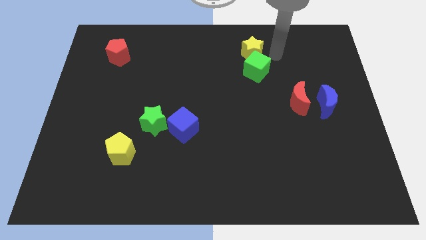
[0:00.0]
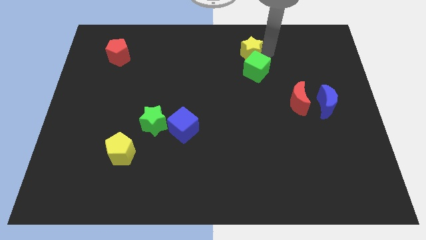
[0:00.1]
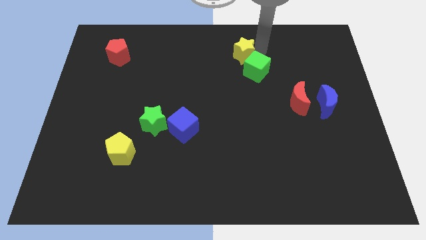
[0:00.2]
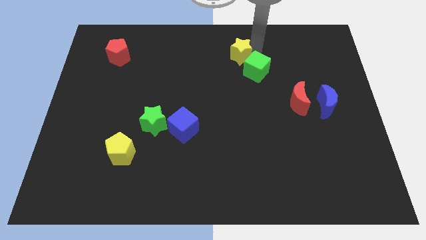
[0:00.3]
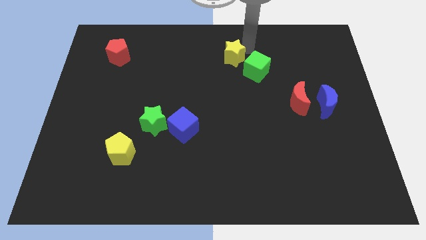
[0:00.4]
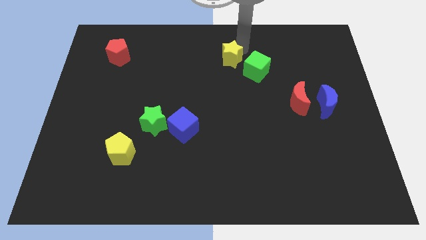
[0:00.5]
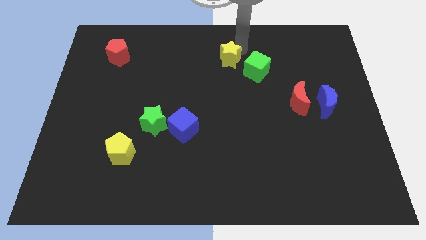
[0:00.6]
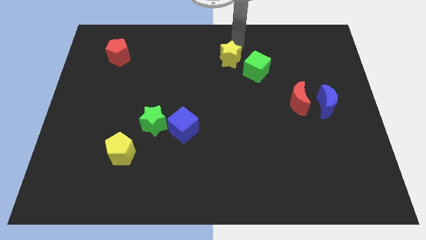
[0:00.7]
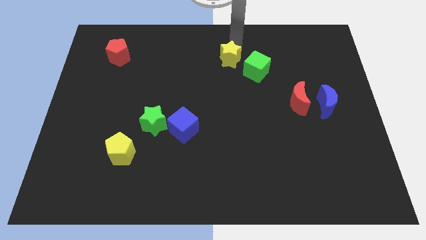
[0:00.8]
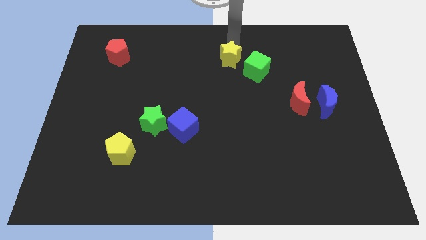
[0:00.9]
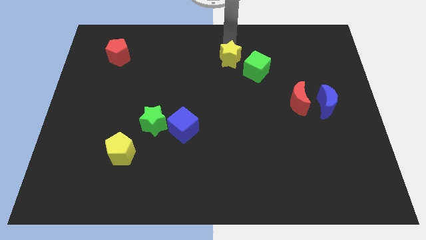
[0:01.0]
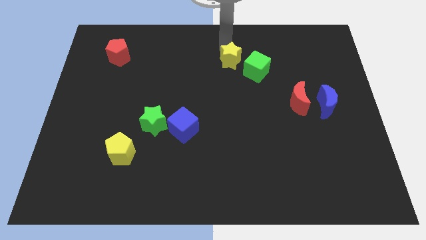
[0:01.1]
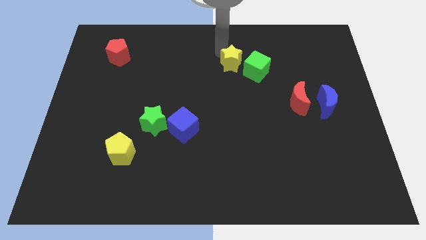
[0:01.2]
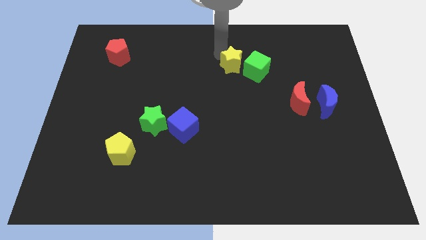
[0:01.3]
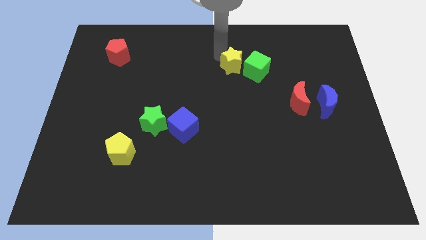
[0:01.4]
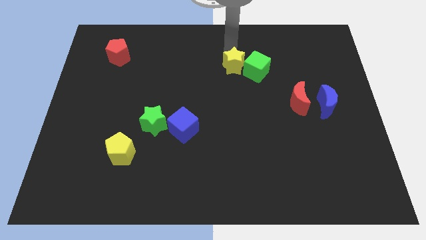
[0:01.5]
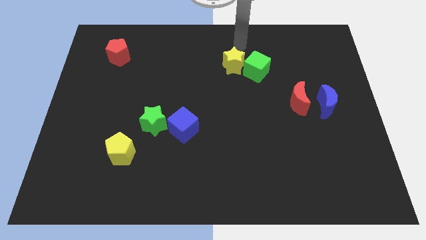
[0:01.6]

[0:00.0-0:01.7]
place green star to the left of the green cube

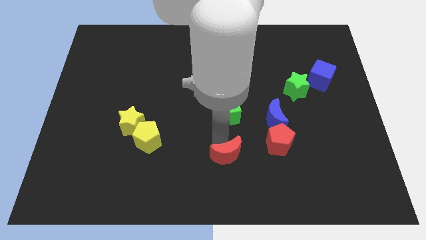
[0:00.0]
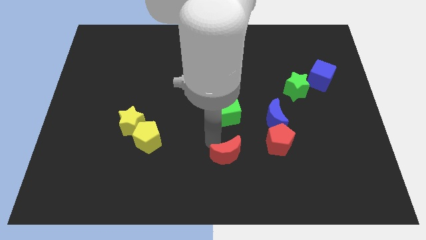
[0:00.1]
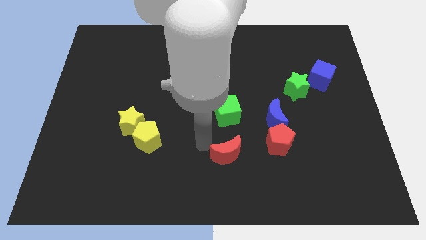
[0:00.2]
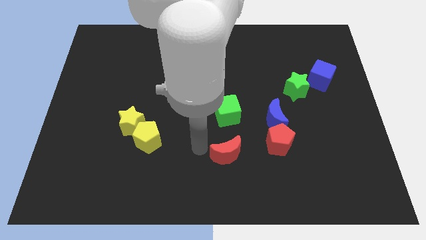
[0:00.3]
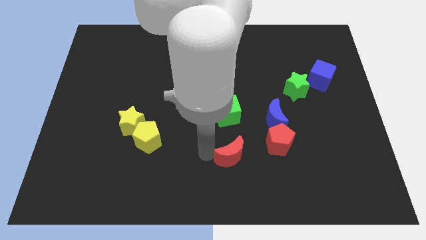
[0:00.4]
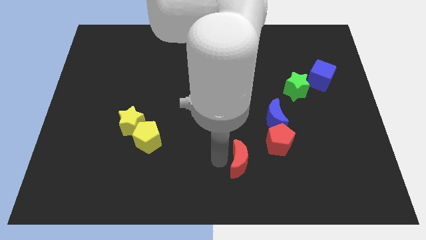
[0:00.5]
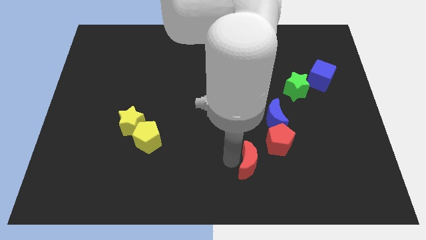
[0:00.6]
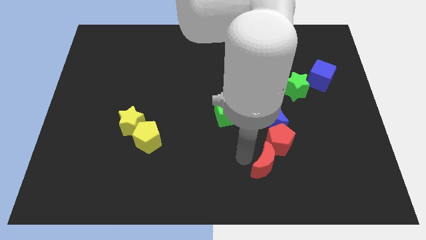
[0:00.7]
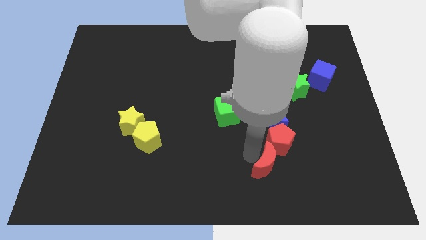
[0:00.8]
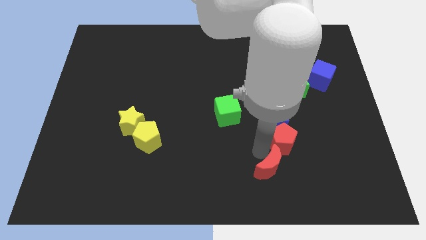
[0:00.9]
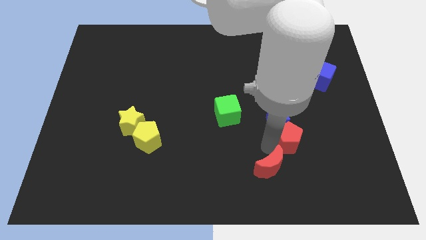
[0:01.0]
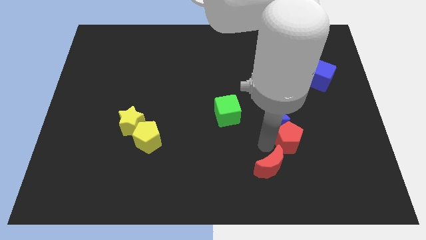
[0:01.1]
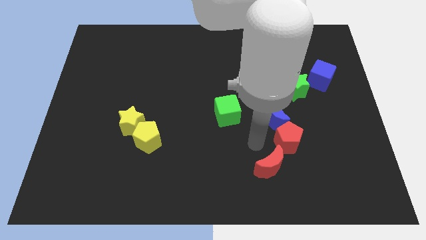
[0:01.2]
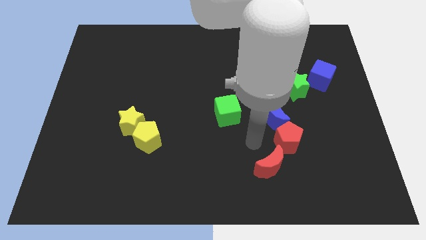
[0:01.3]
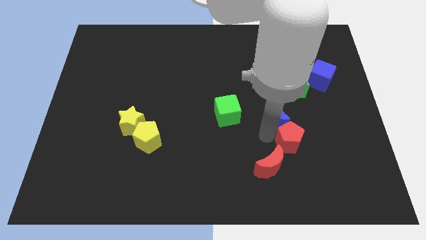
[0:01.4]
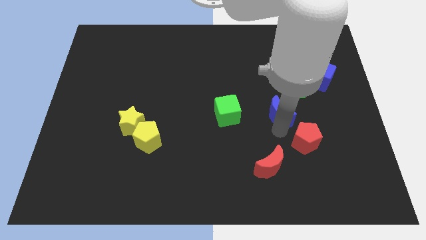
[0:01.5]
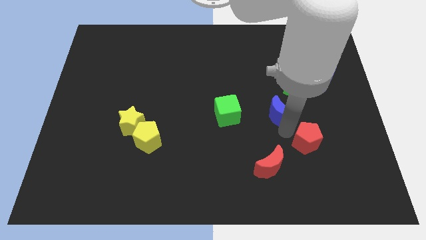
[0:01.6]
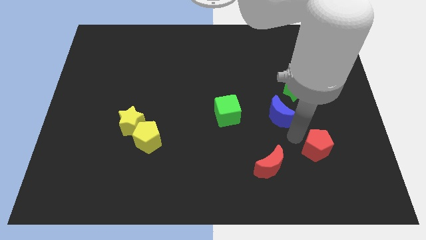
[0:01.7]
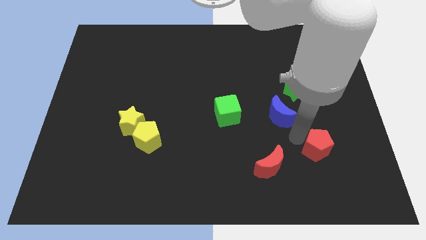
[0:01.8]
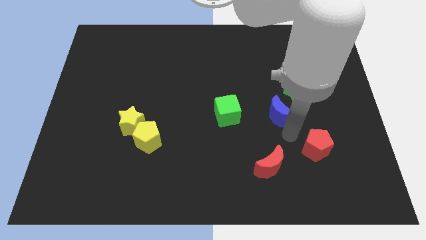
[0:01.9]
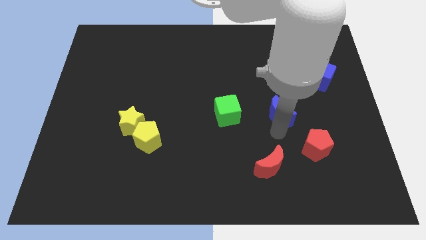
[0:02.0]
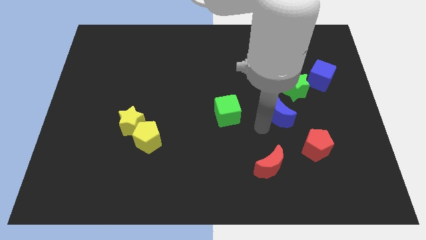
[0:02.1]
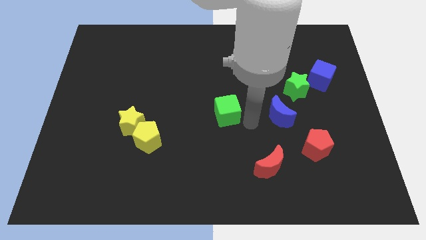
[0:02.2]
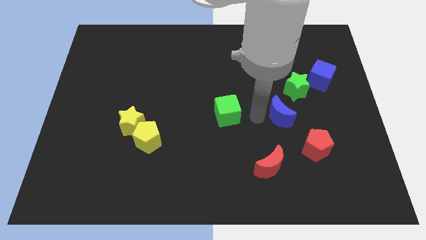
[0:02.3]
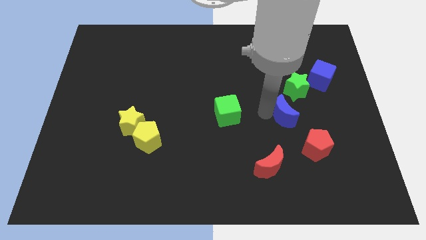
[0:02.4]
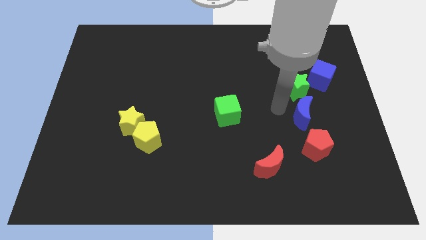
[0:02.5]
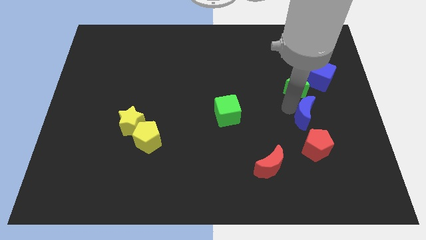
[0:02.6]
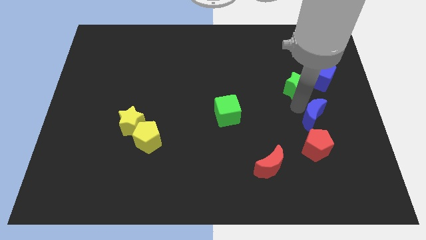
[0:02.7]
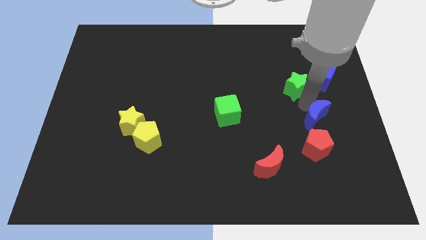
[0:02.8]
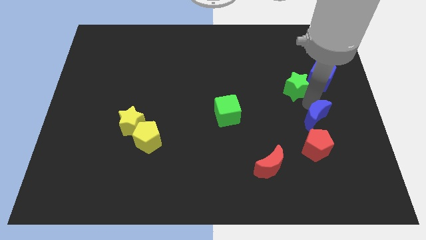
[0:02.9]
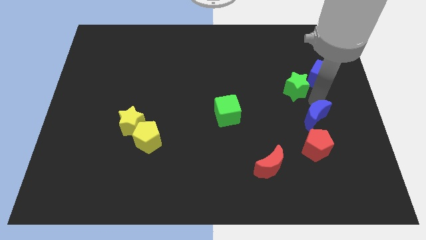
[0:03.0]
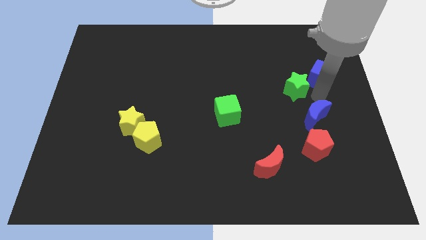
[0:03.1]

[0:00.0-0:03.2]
push the red blocks and blue moon to the right side

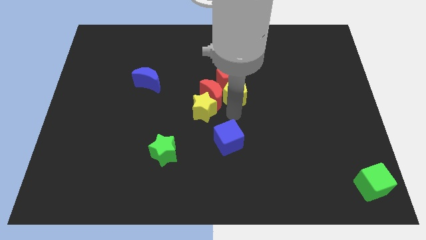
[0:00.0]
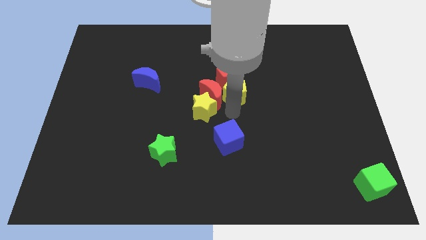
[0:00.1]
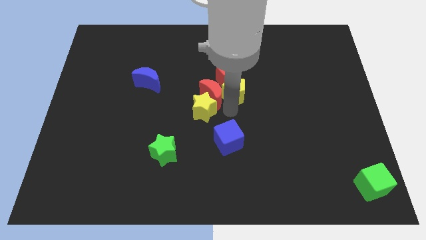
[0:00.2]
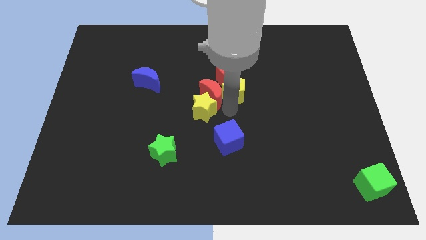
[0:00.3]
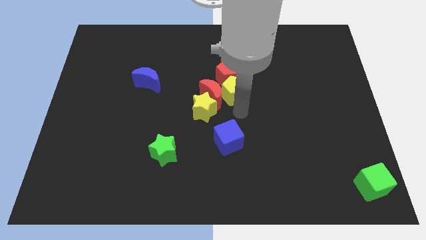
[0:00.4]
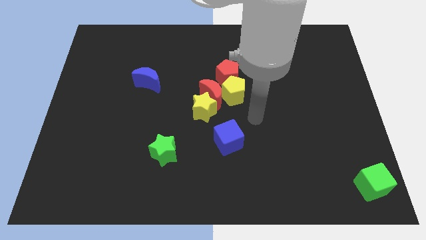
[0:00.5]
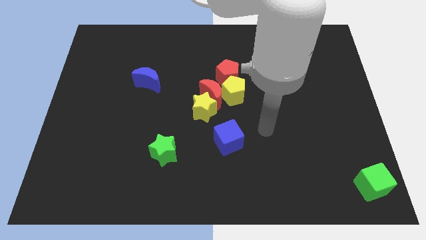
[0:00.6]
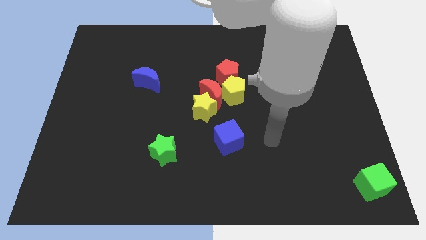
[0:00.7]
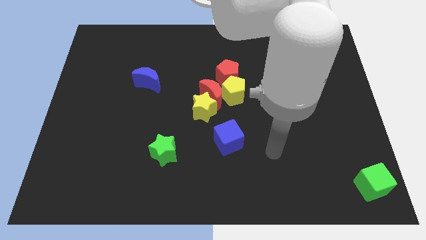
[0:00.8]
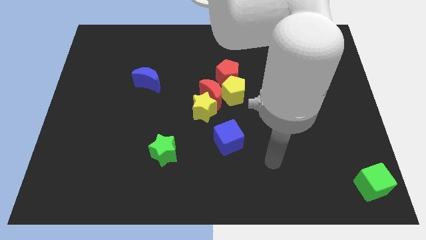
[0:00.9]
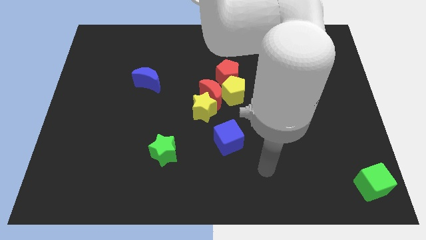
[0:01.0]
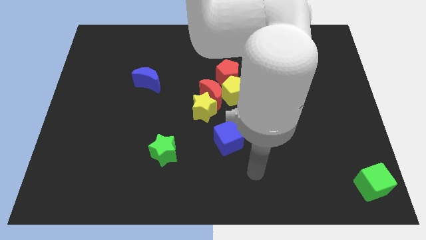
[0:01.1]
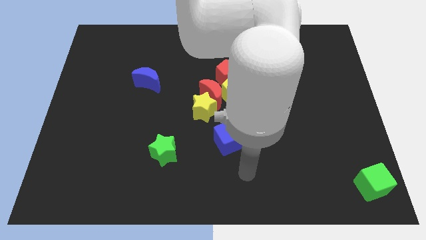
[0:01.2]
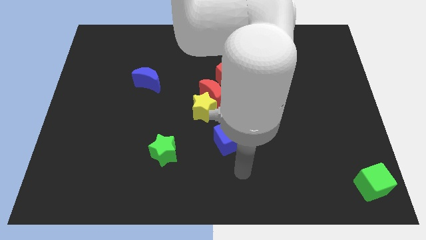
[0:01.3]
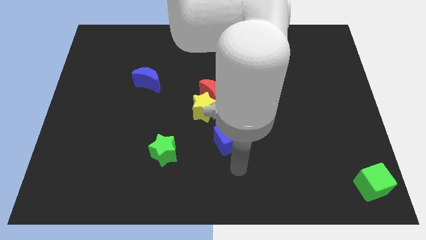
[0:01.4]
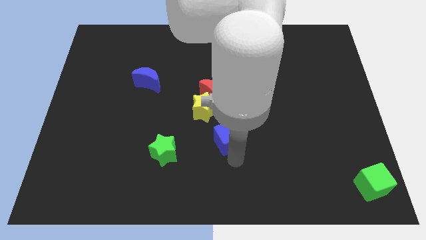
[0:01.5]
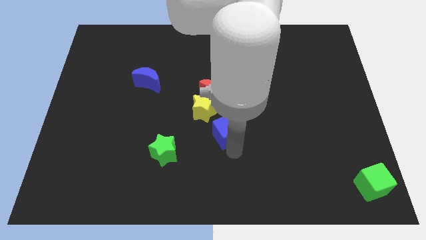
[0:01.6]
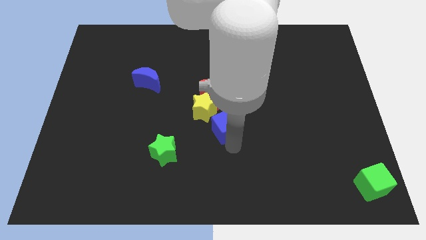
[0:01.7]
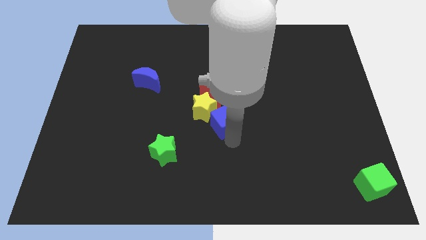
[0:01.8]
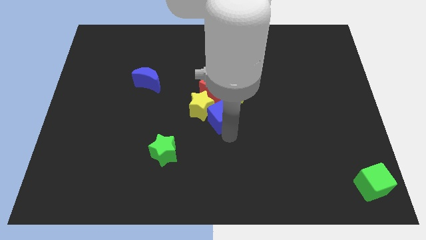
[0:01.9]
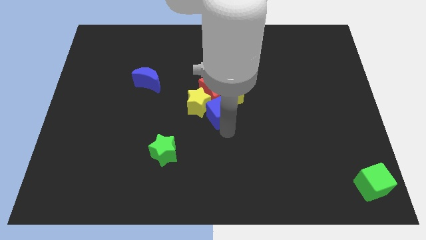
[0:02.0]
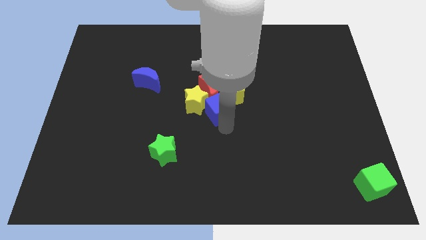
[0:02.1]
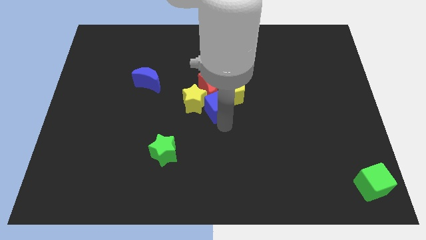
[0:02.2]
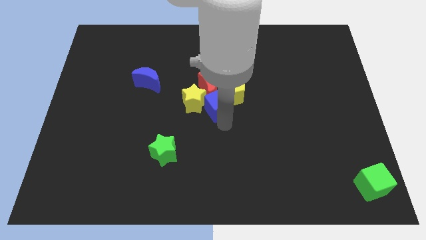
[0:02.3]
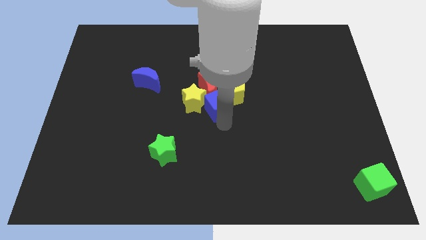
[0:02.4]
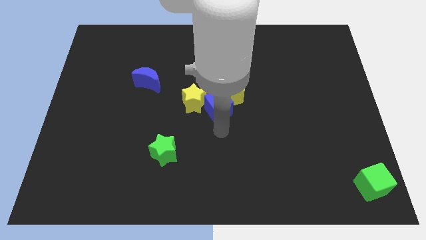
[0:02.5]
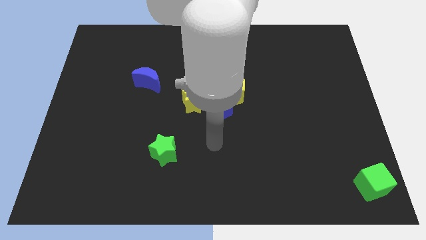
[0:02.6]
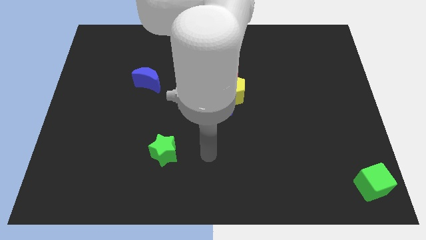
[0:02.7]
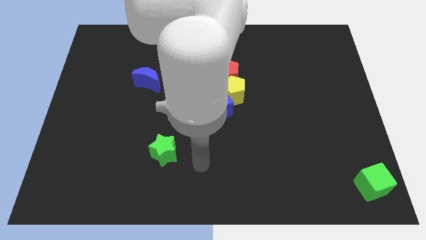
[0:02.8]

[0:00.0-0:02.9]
move the blue cube towards the center

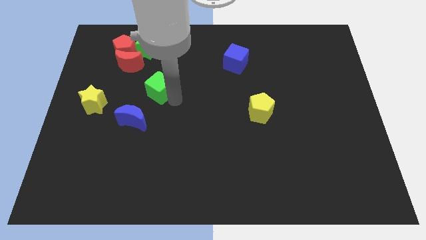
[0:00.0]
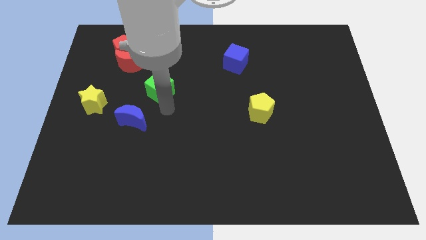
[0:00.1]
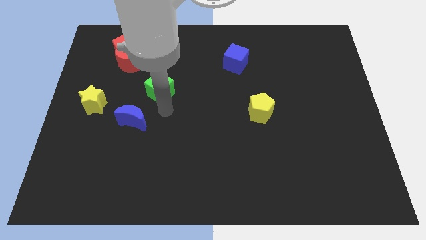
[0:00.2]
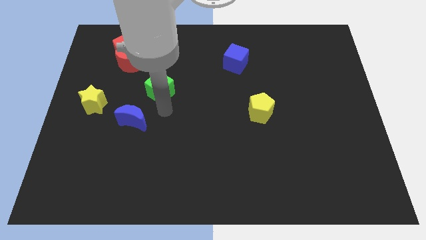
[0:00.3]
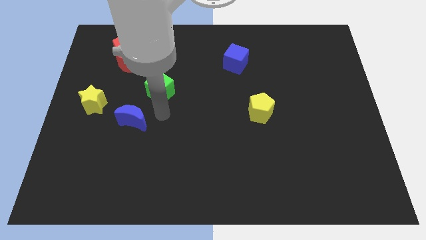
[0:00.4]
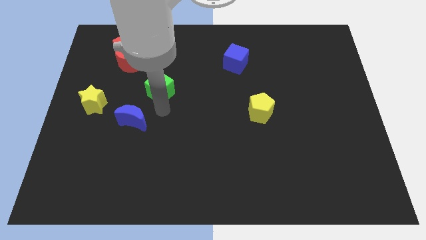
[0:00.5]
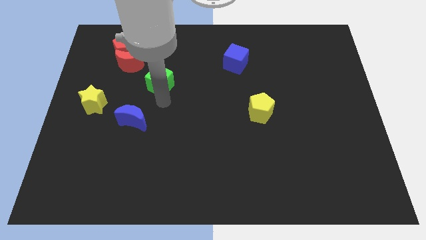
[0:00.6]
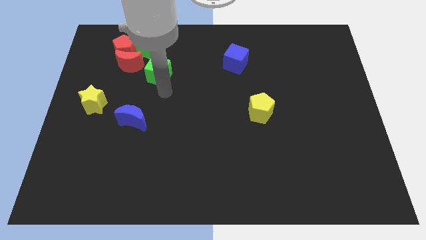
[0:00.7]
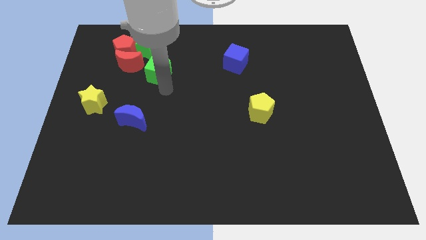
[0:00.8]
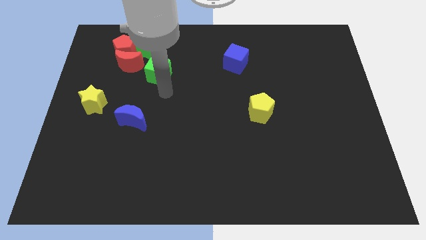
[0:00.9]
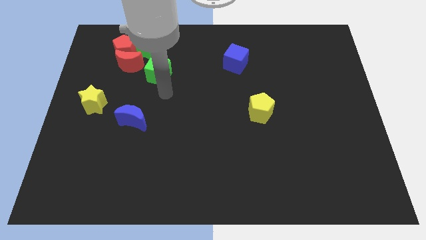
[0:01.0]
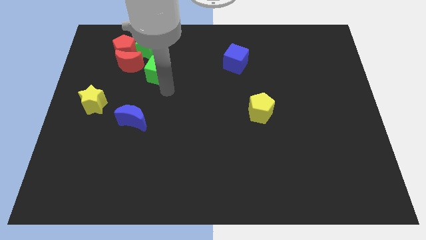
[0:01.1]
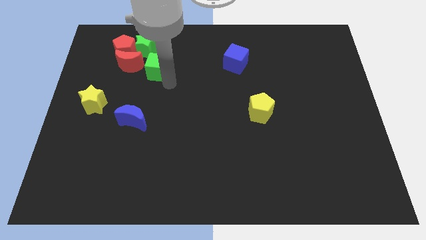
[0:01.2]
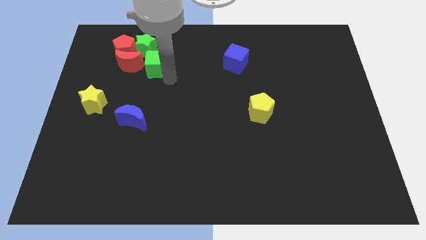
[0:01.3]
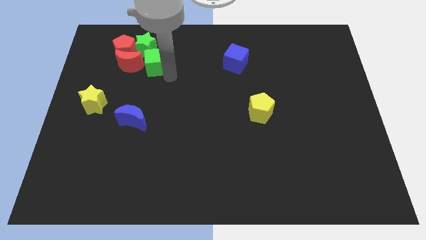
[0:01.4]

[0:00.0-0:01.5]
place the green cube below the green star
